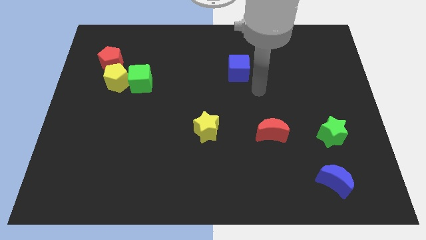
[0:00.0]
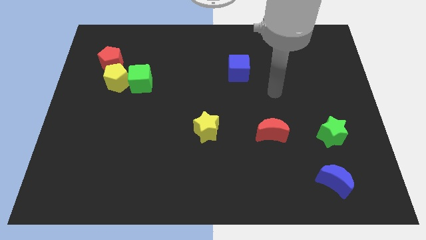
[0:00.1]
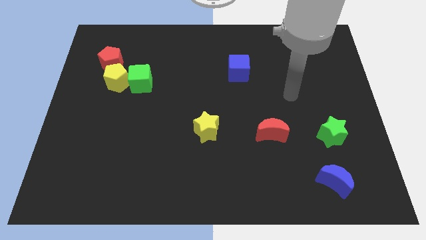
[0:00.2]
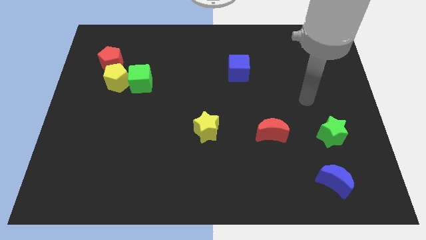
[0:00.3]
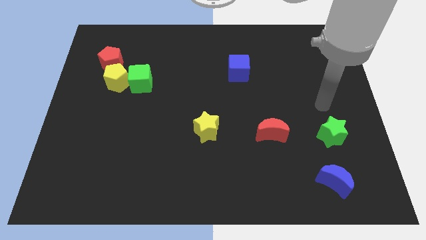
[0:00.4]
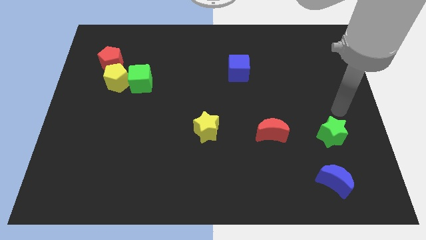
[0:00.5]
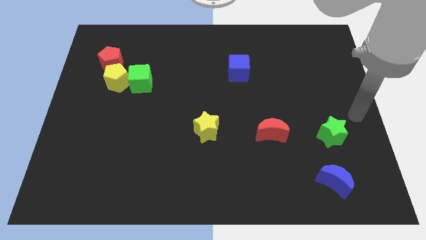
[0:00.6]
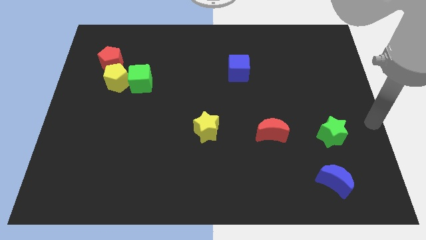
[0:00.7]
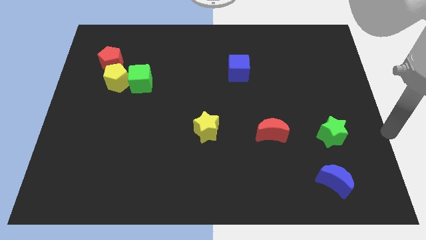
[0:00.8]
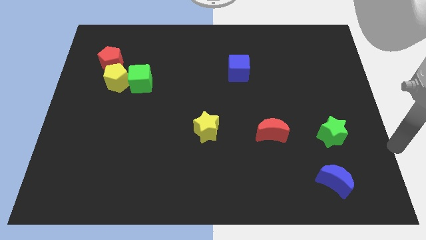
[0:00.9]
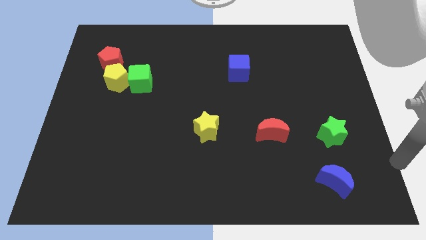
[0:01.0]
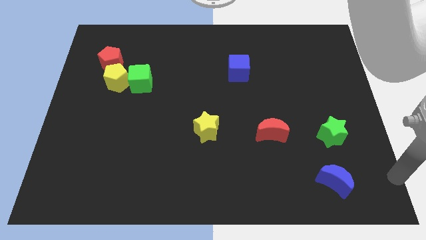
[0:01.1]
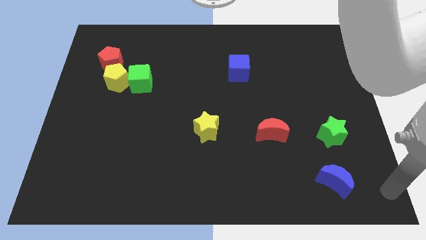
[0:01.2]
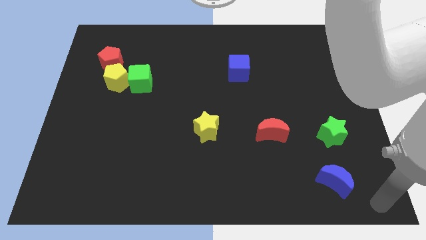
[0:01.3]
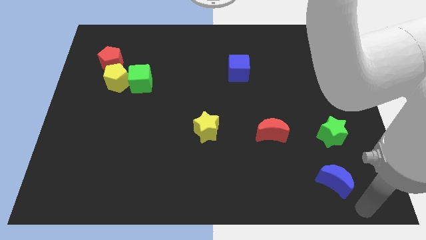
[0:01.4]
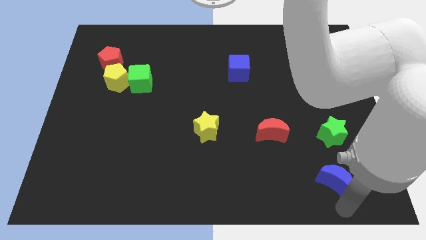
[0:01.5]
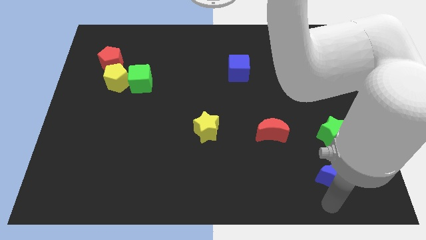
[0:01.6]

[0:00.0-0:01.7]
move your arm to the bottom of blue crescent

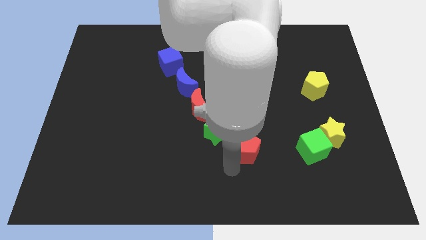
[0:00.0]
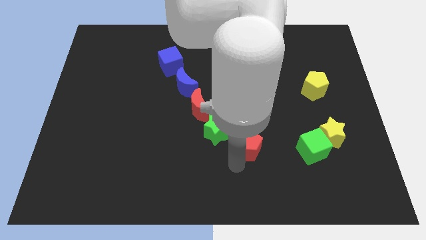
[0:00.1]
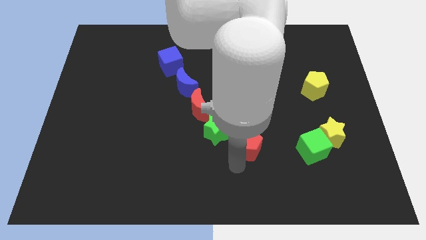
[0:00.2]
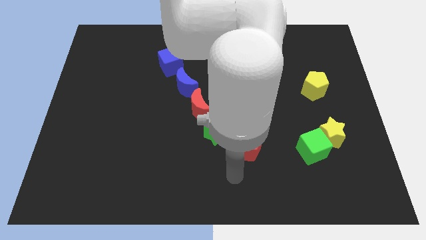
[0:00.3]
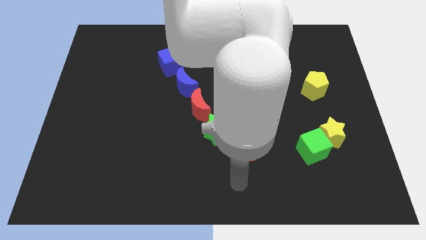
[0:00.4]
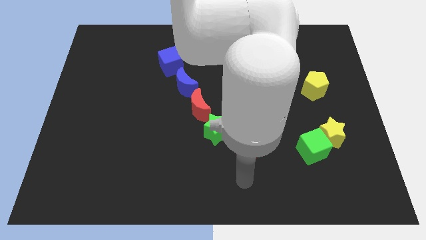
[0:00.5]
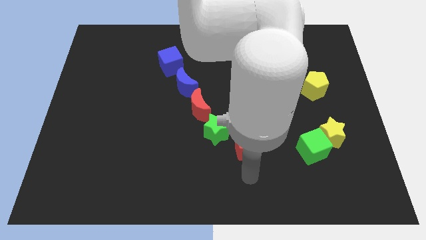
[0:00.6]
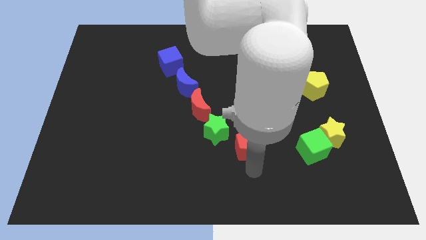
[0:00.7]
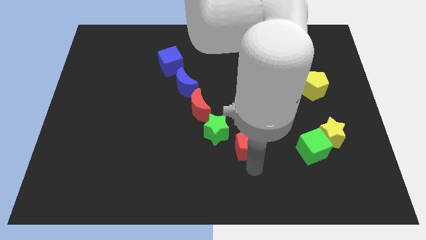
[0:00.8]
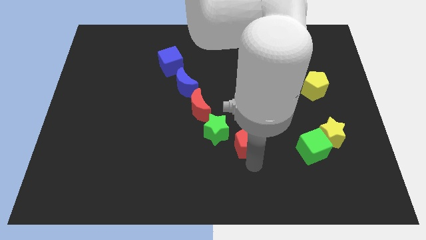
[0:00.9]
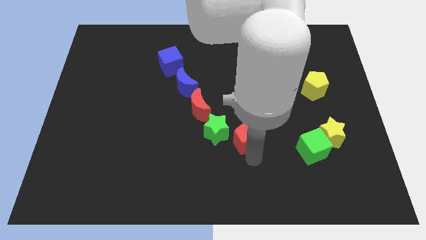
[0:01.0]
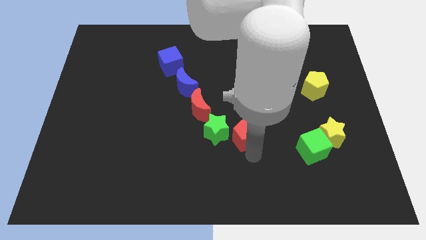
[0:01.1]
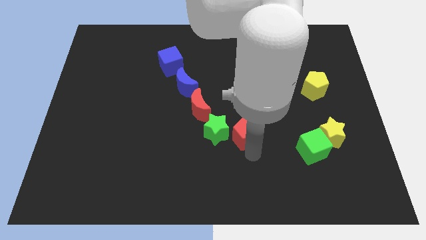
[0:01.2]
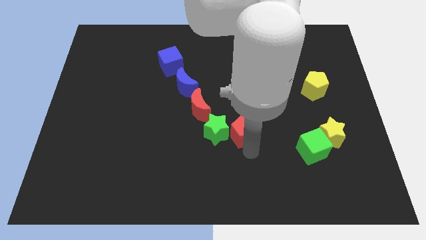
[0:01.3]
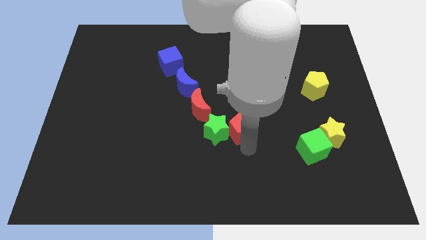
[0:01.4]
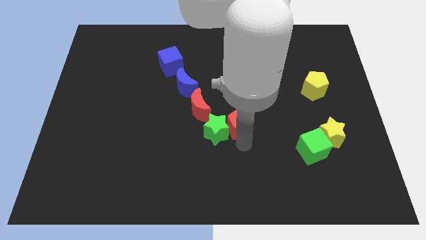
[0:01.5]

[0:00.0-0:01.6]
place red pentagon to the right of the green star

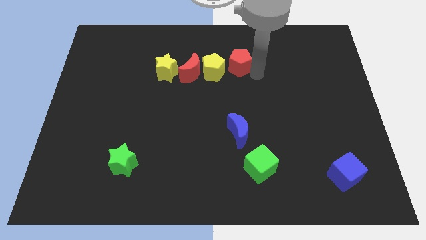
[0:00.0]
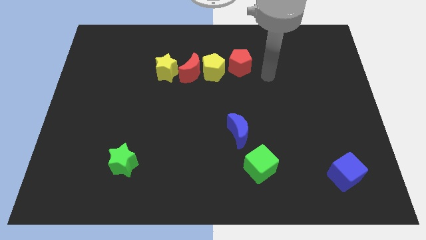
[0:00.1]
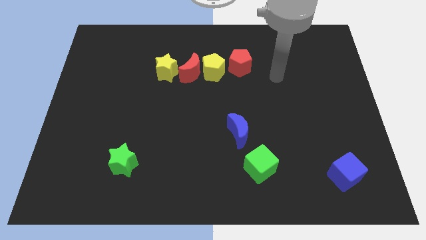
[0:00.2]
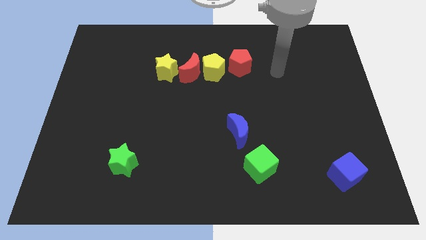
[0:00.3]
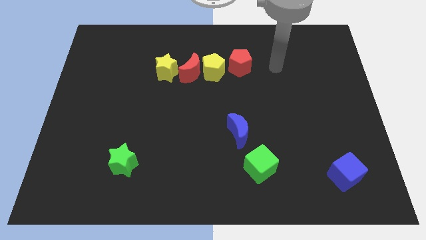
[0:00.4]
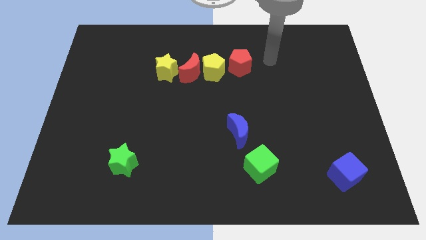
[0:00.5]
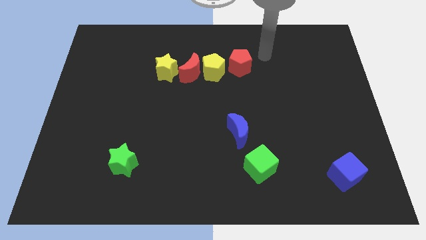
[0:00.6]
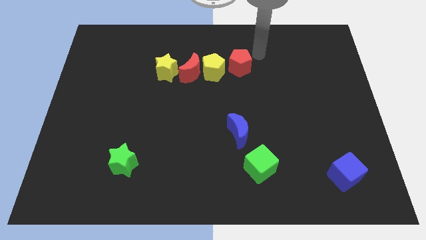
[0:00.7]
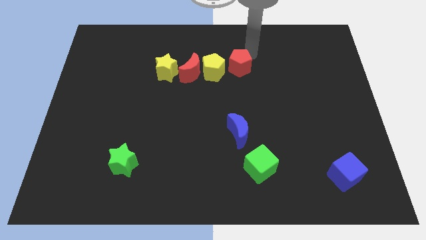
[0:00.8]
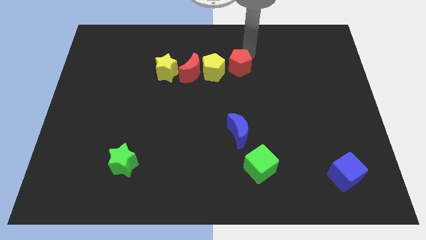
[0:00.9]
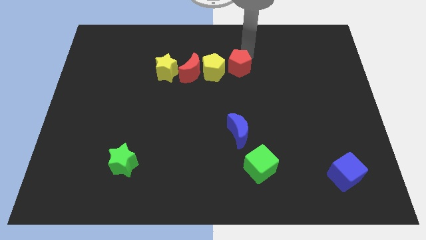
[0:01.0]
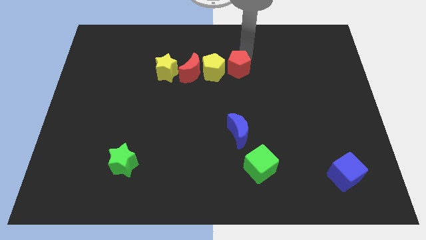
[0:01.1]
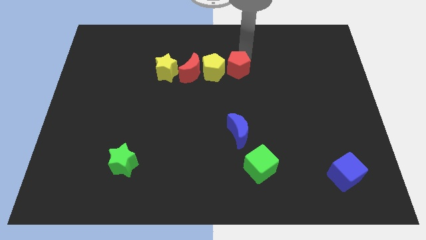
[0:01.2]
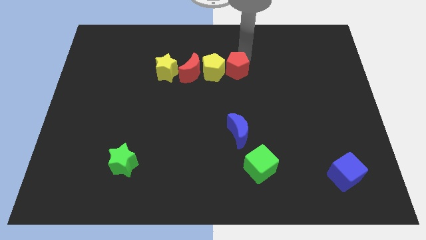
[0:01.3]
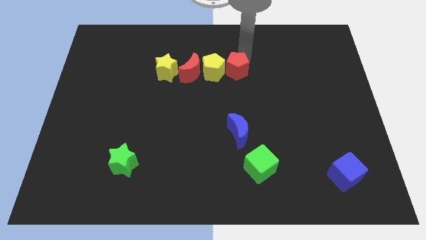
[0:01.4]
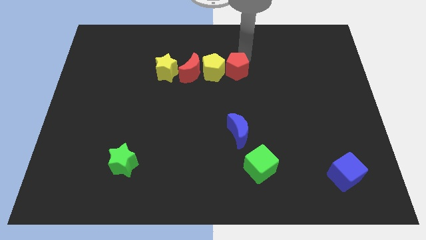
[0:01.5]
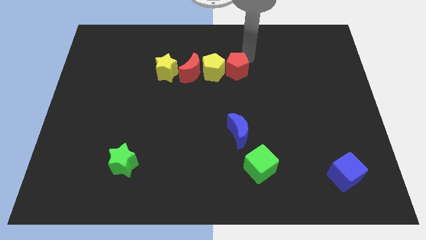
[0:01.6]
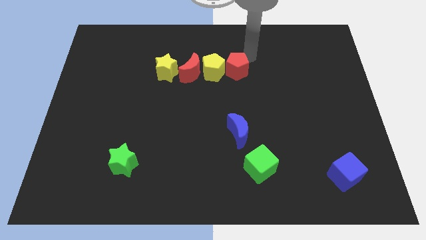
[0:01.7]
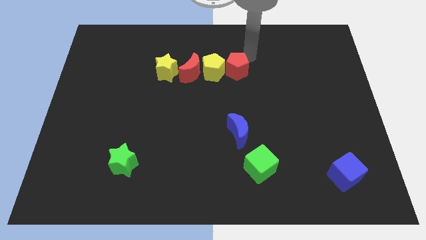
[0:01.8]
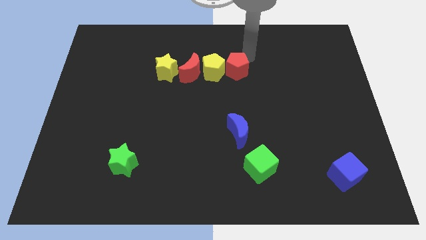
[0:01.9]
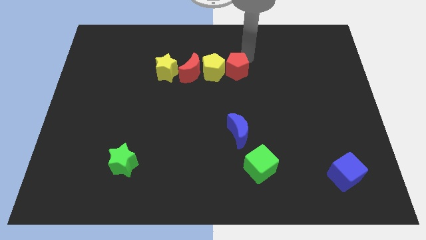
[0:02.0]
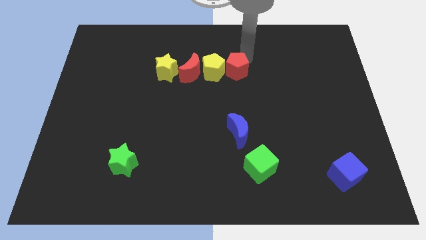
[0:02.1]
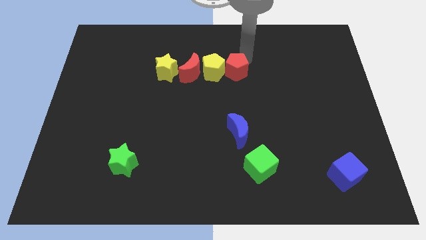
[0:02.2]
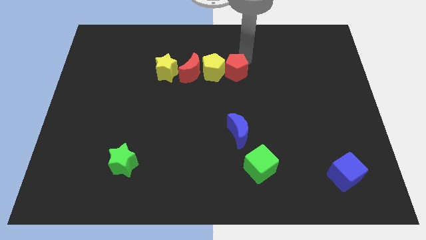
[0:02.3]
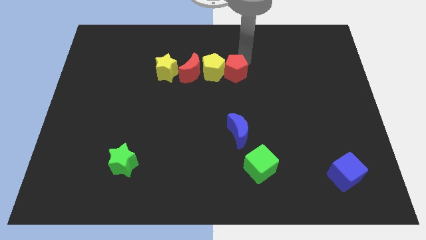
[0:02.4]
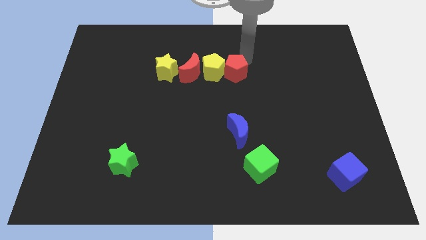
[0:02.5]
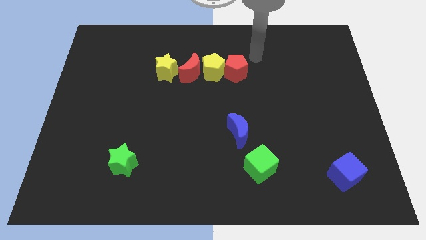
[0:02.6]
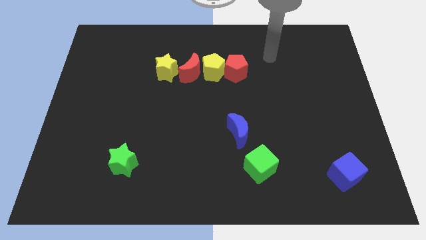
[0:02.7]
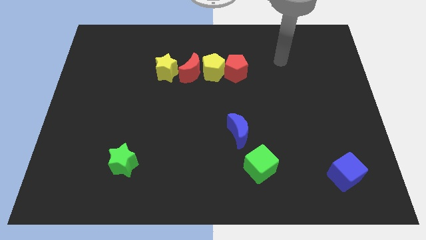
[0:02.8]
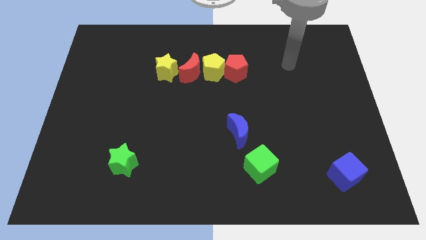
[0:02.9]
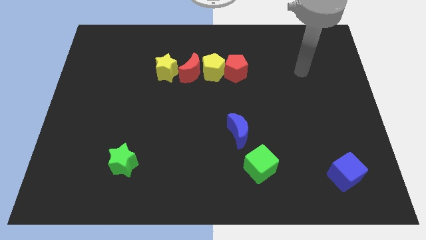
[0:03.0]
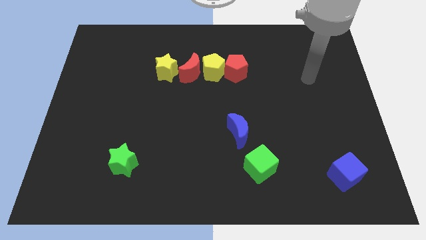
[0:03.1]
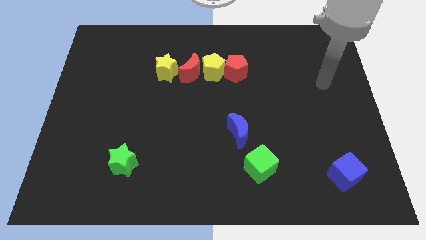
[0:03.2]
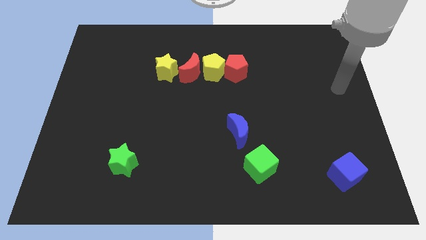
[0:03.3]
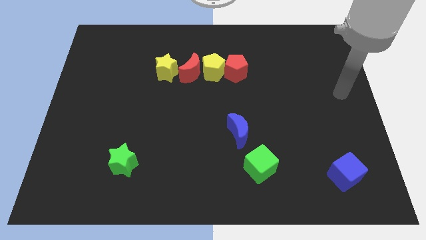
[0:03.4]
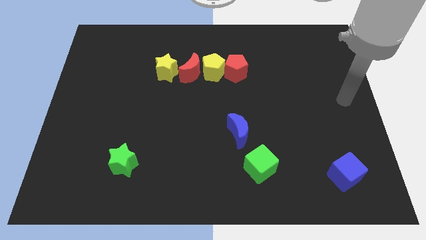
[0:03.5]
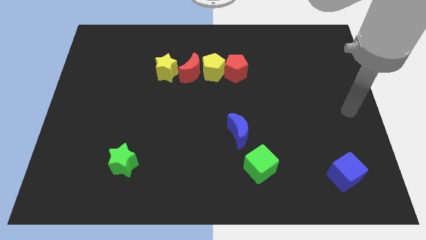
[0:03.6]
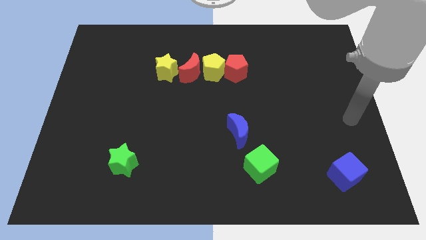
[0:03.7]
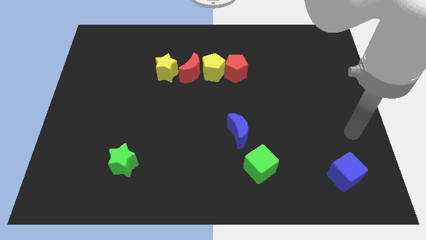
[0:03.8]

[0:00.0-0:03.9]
move the red pentagon slightly downwards

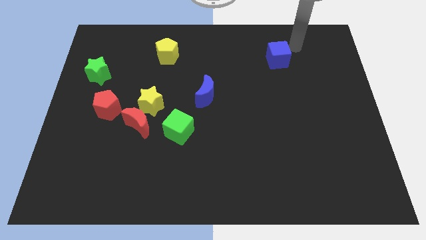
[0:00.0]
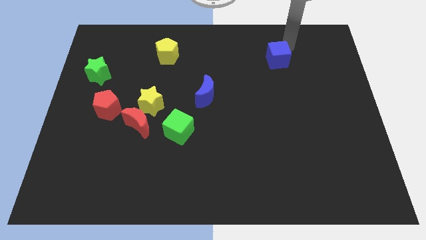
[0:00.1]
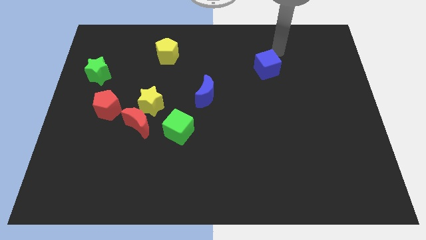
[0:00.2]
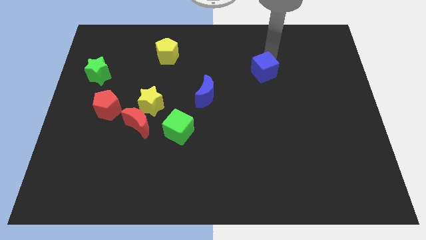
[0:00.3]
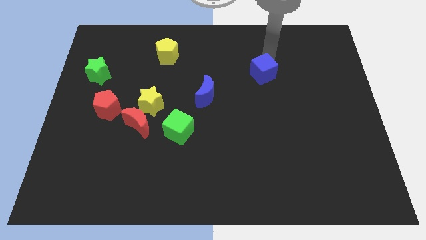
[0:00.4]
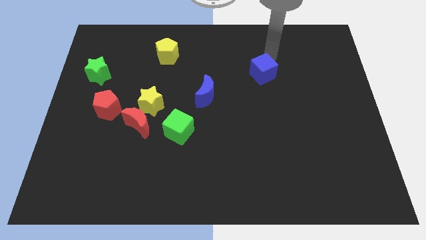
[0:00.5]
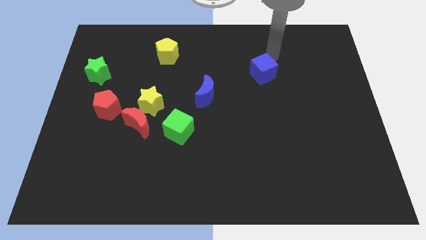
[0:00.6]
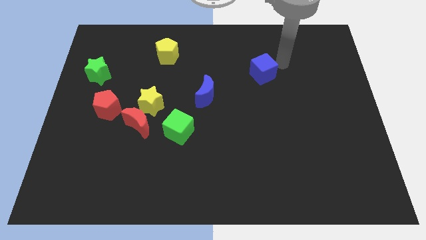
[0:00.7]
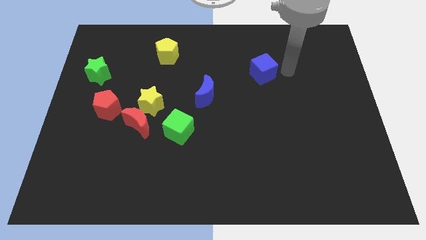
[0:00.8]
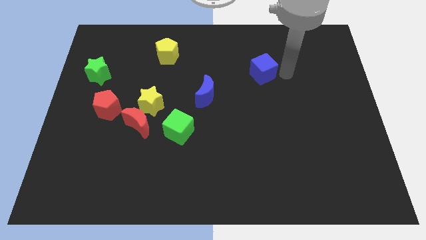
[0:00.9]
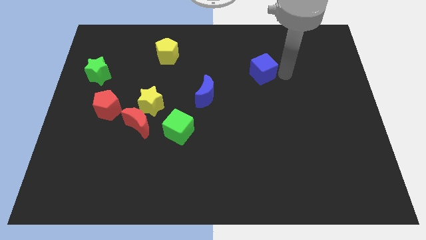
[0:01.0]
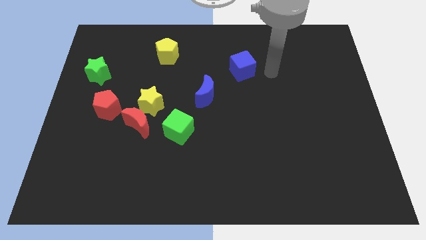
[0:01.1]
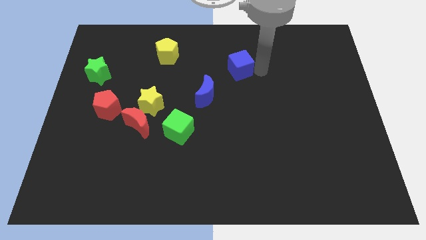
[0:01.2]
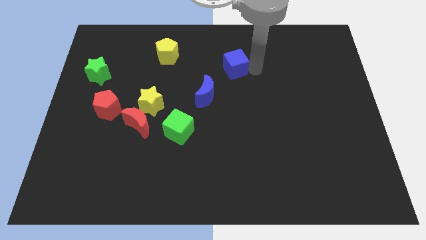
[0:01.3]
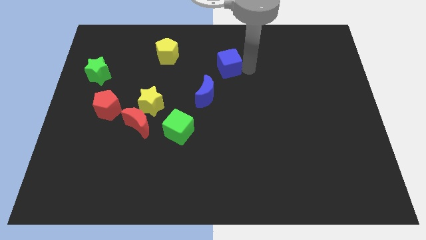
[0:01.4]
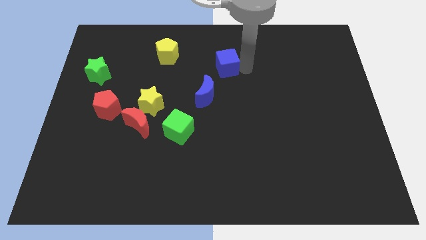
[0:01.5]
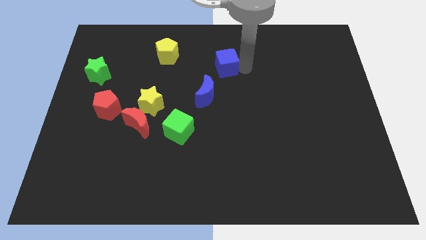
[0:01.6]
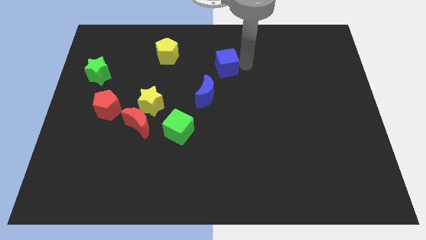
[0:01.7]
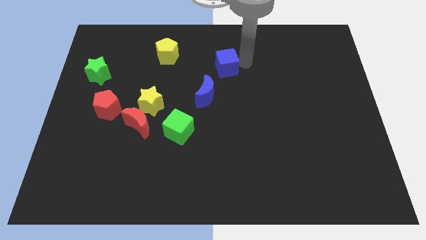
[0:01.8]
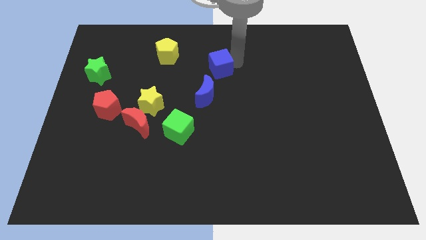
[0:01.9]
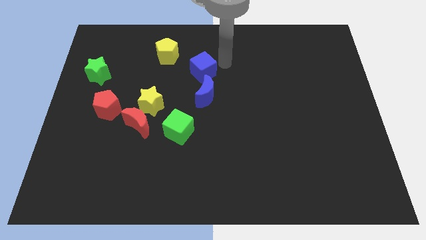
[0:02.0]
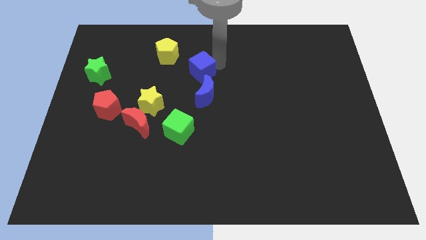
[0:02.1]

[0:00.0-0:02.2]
place blue cube on top of blue moon
